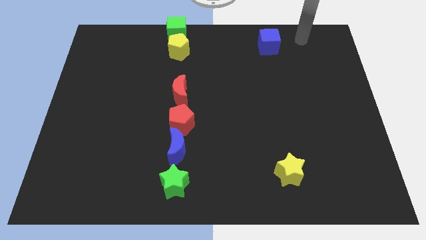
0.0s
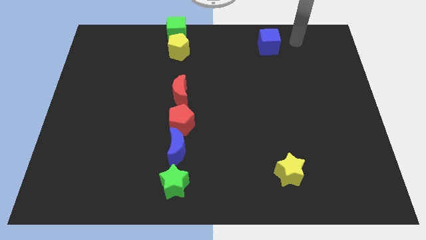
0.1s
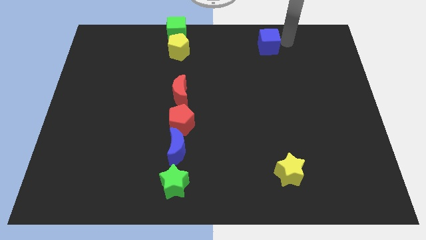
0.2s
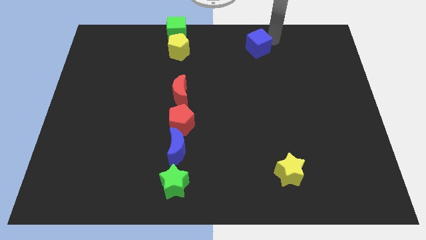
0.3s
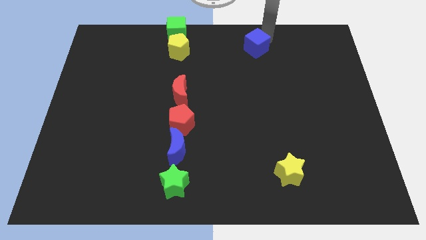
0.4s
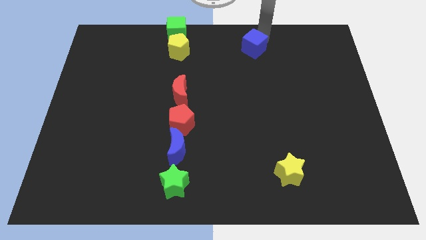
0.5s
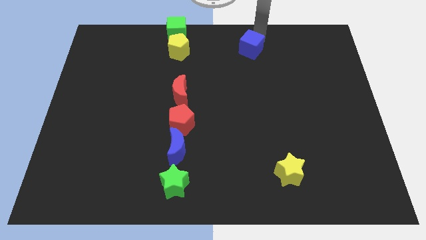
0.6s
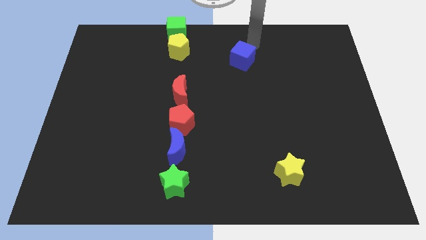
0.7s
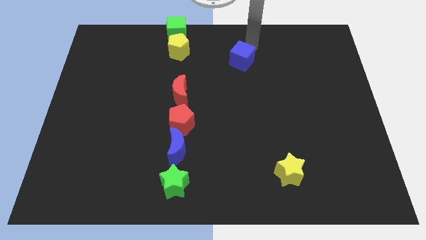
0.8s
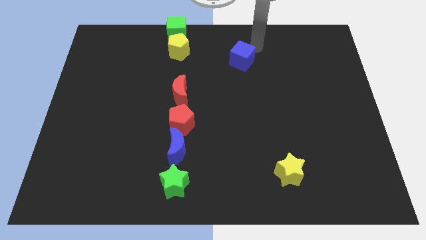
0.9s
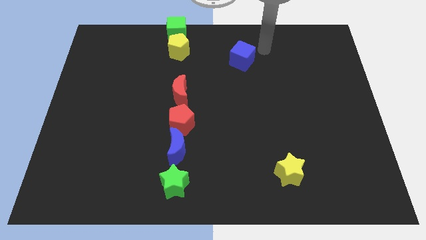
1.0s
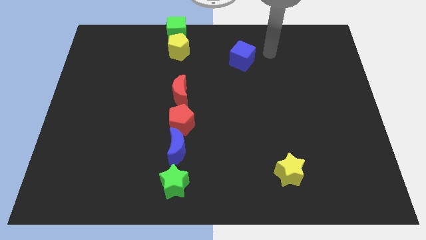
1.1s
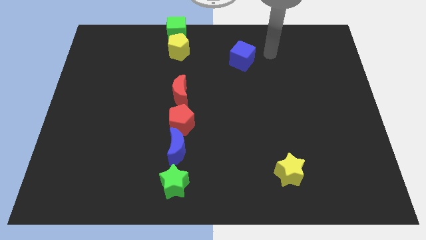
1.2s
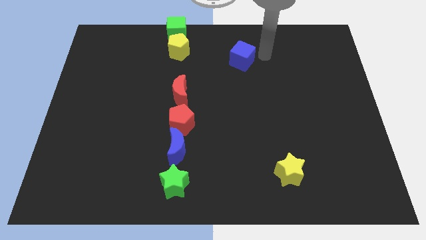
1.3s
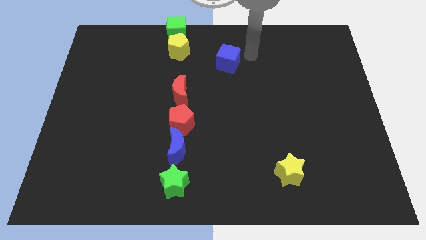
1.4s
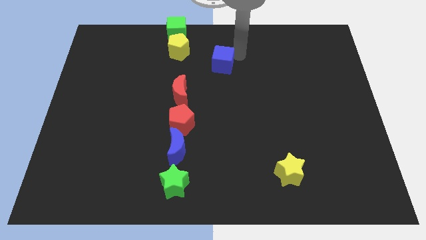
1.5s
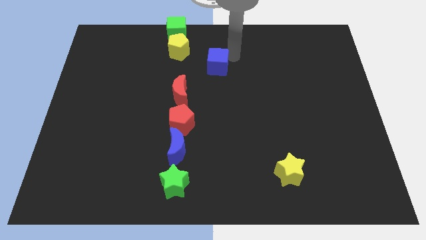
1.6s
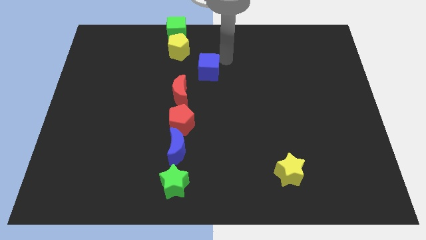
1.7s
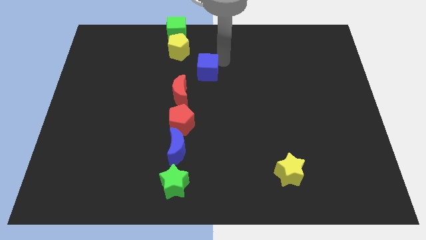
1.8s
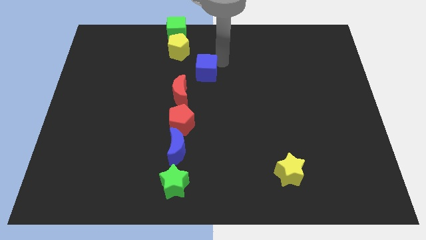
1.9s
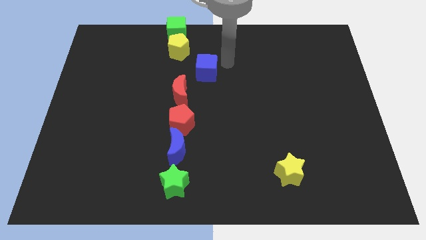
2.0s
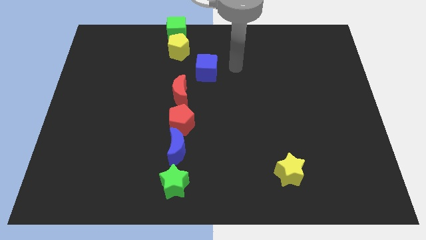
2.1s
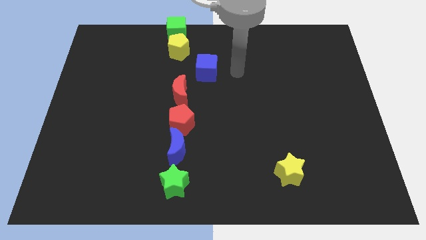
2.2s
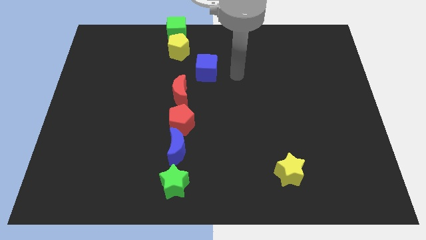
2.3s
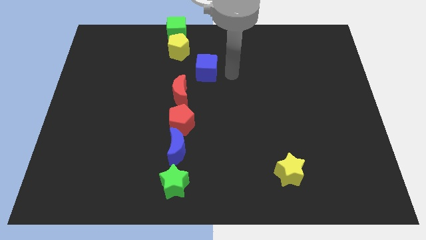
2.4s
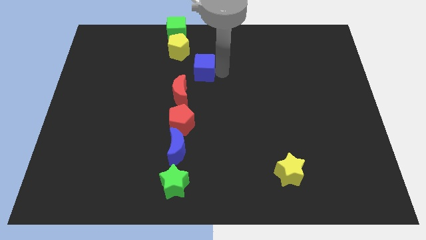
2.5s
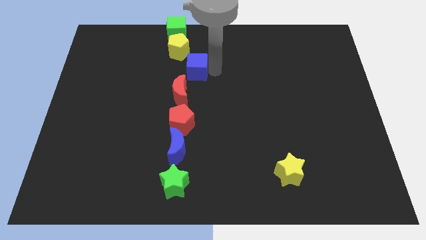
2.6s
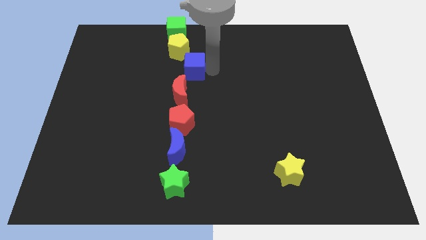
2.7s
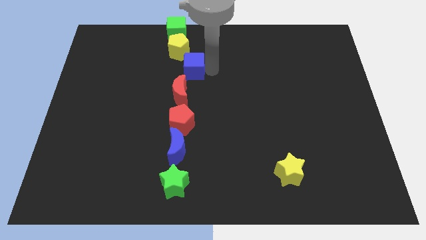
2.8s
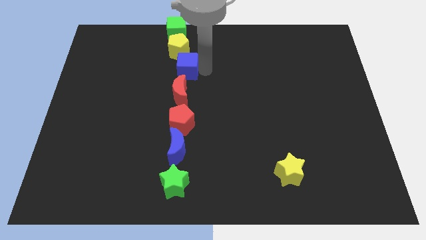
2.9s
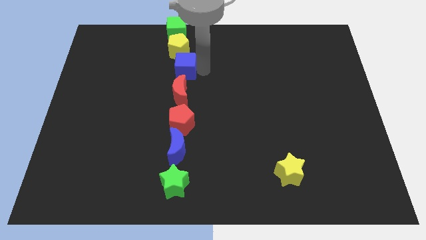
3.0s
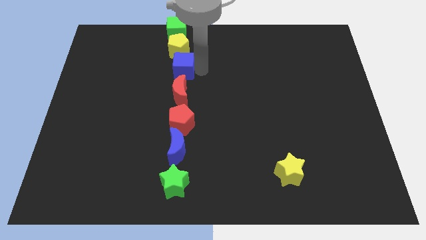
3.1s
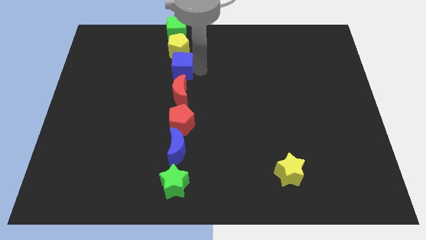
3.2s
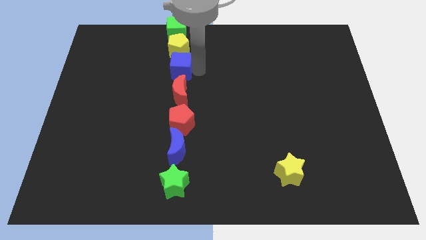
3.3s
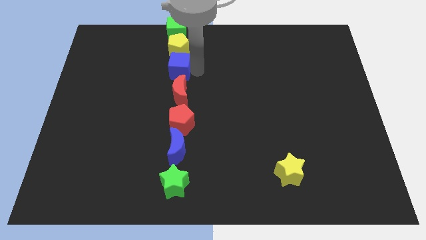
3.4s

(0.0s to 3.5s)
place blue cube in between yellow pentagon and red moon

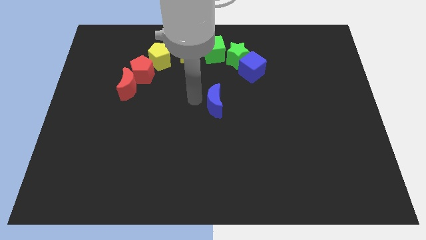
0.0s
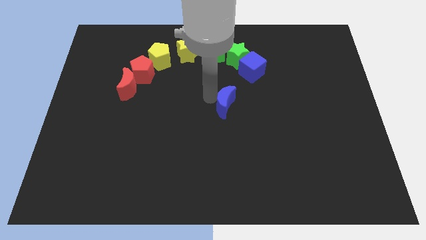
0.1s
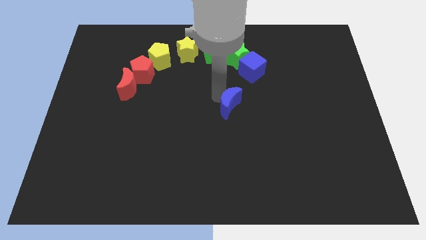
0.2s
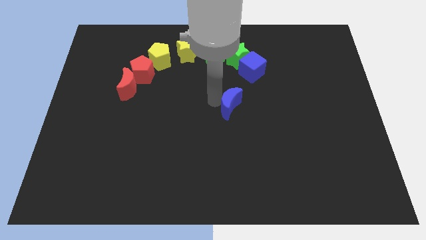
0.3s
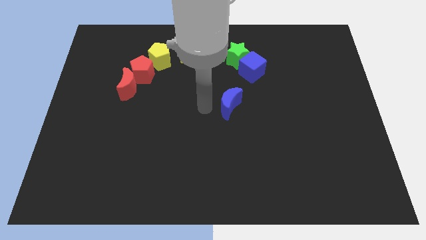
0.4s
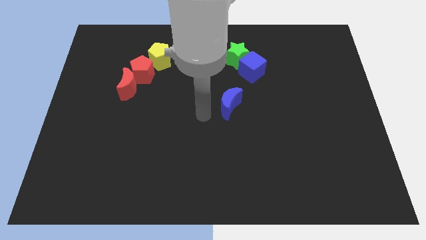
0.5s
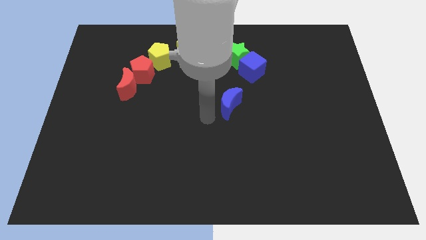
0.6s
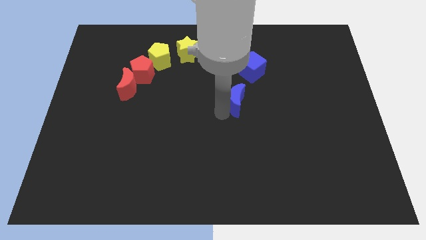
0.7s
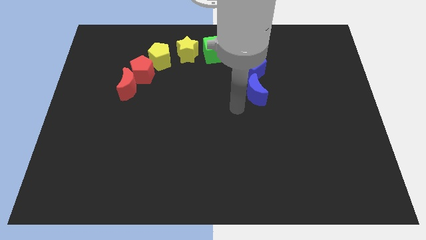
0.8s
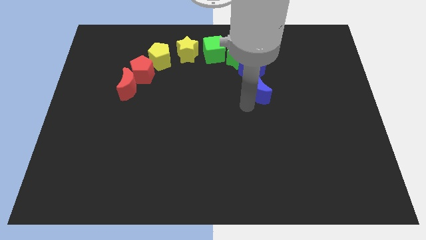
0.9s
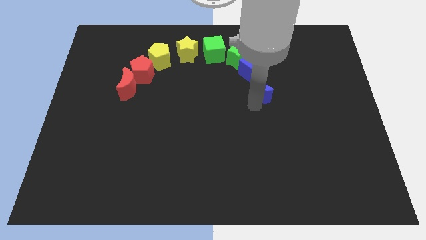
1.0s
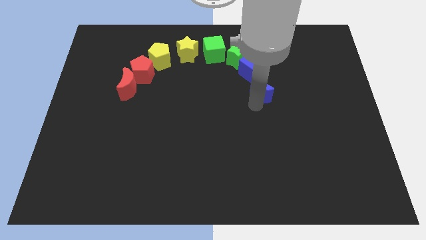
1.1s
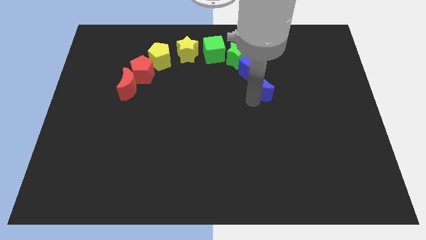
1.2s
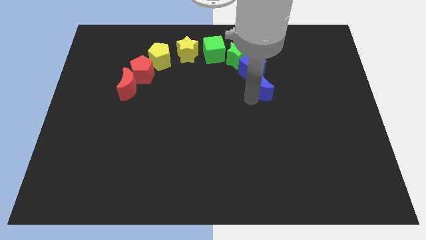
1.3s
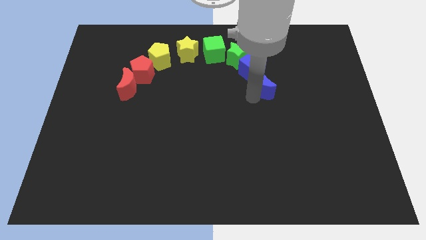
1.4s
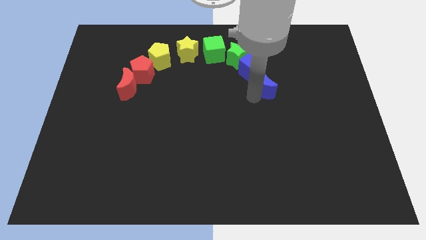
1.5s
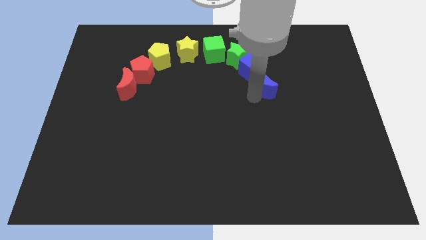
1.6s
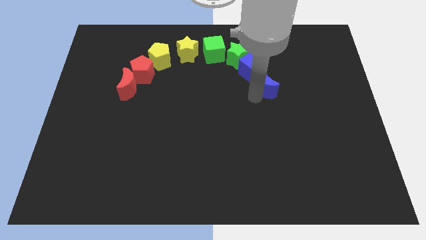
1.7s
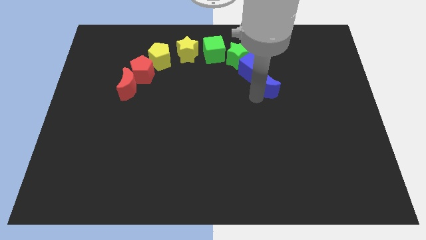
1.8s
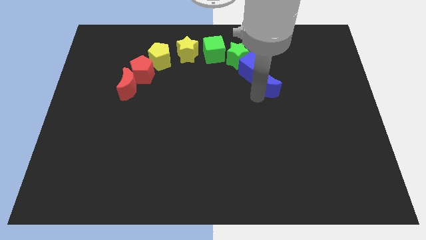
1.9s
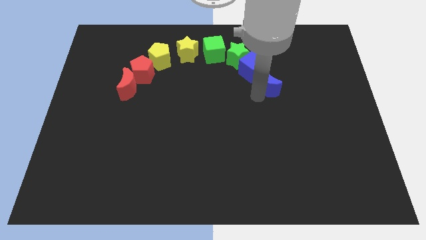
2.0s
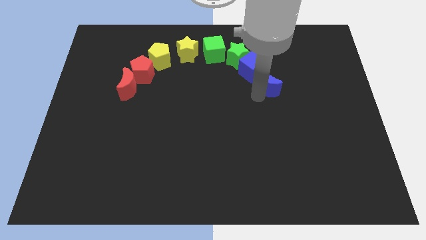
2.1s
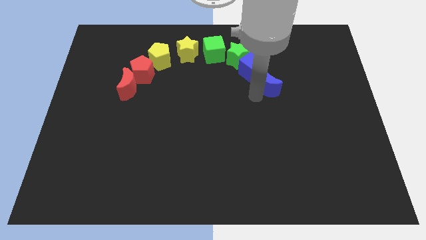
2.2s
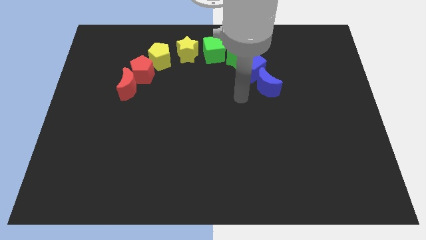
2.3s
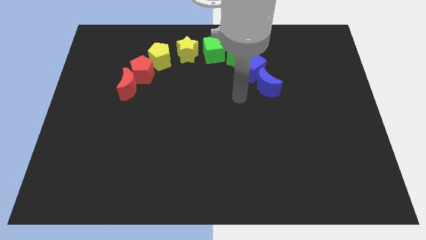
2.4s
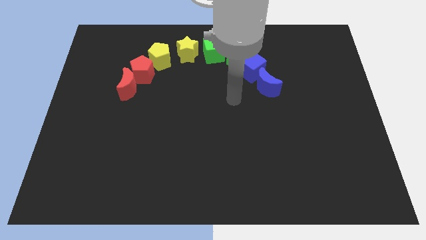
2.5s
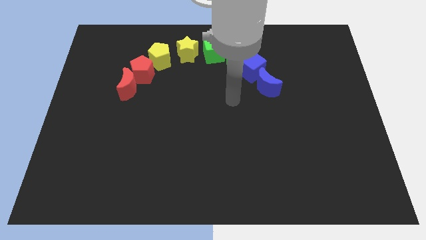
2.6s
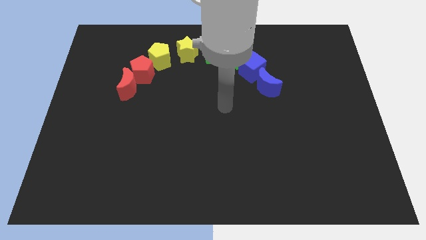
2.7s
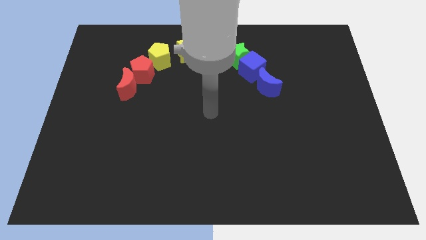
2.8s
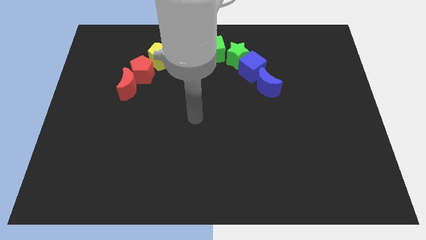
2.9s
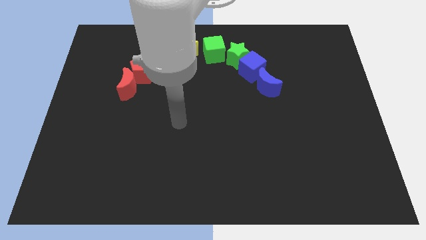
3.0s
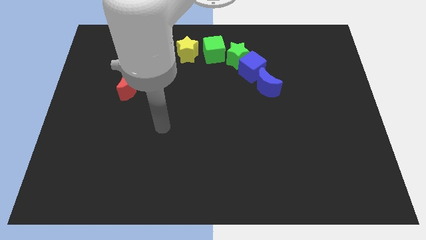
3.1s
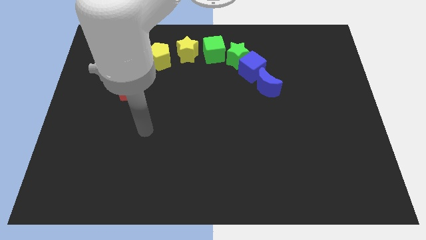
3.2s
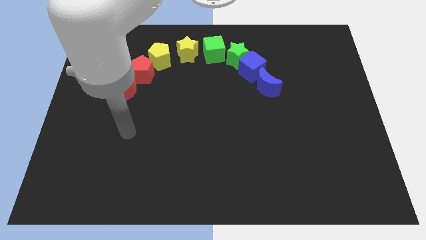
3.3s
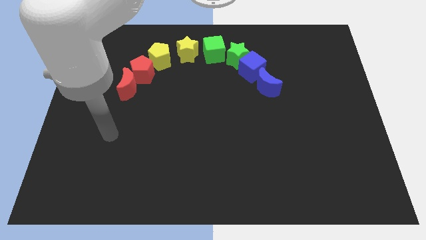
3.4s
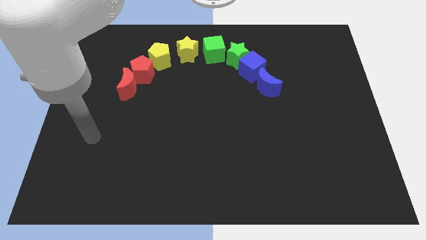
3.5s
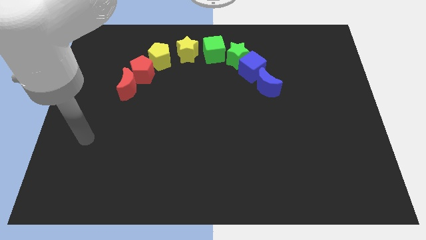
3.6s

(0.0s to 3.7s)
move the blue moon close to the blue cube

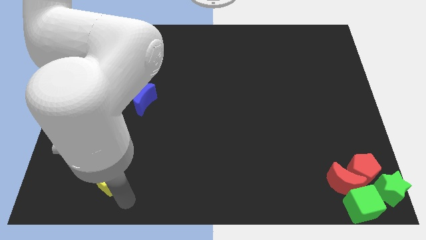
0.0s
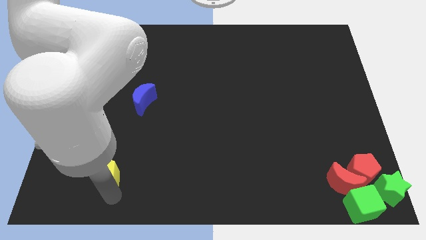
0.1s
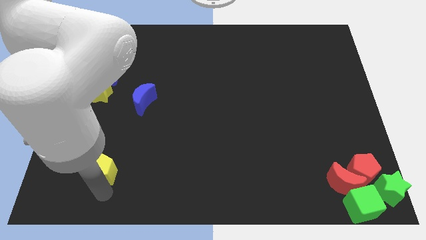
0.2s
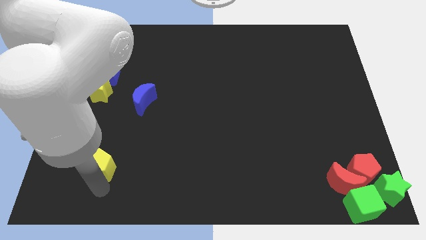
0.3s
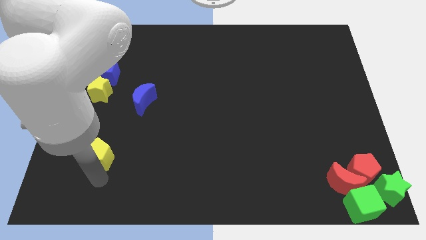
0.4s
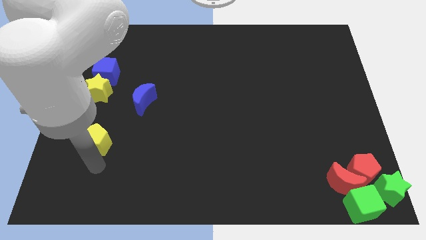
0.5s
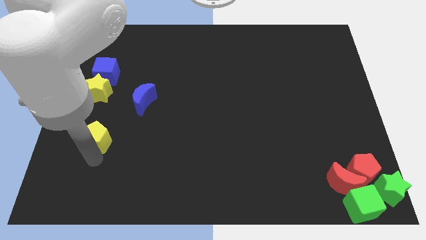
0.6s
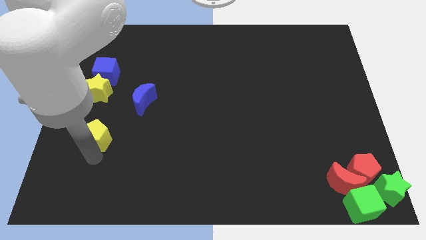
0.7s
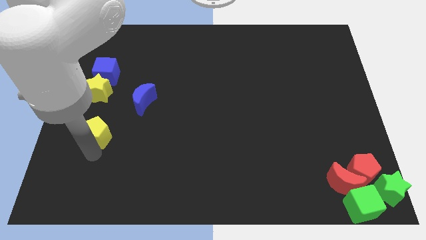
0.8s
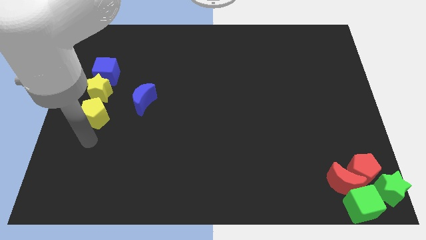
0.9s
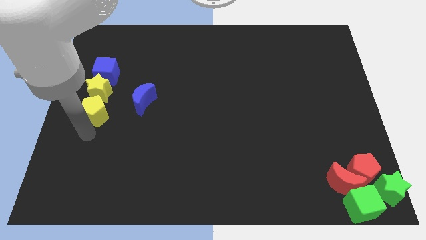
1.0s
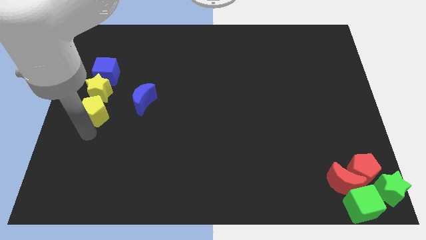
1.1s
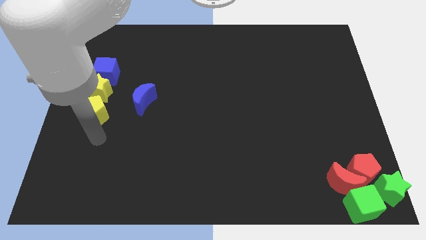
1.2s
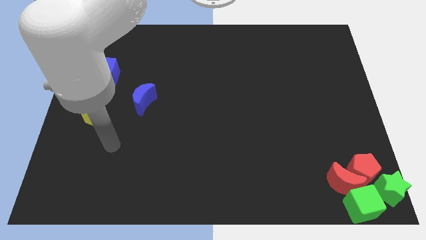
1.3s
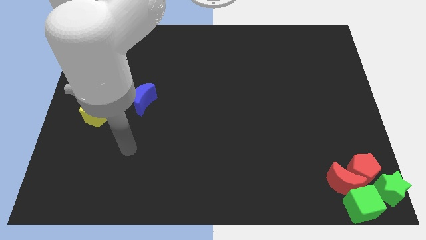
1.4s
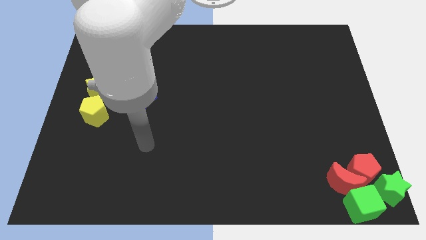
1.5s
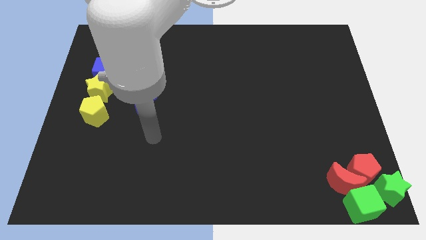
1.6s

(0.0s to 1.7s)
move the yellow pentagon at the bottom side of the yellow star
